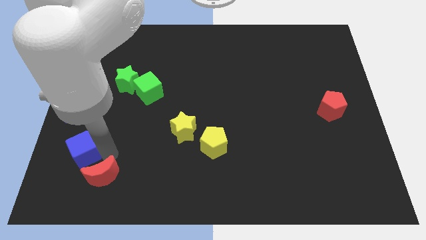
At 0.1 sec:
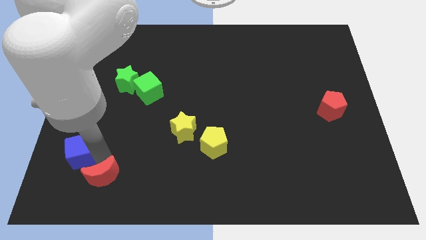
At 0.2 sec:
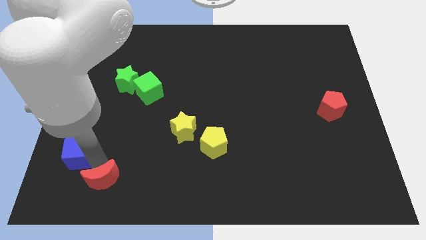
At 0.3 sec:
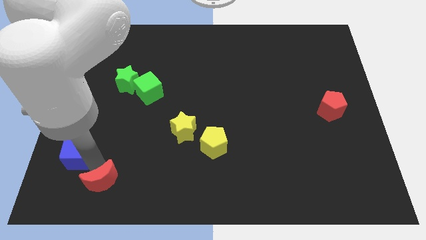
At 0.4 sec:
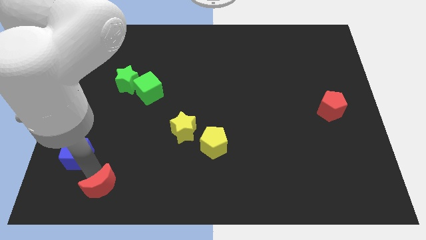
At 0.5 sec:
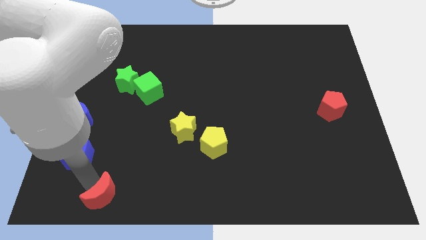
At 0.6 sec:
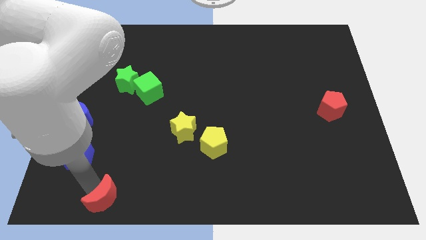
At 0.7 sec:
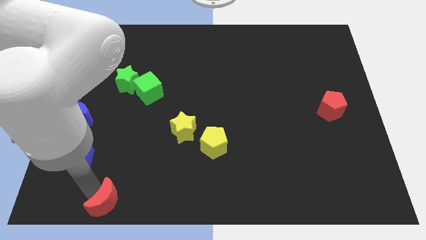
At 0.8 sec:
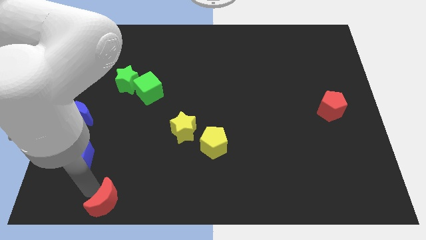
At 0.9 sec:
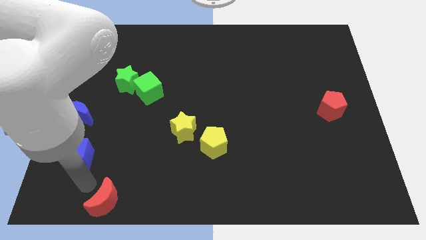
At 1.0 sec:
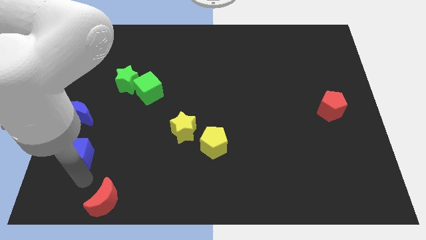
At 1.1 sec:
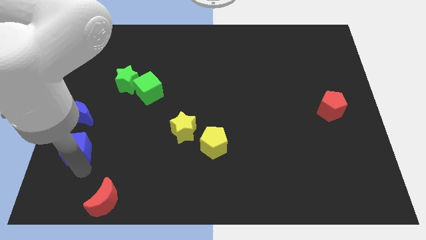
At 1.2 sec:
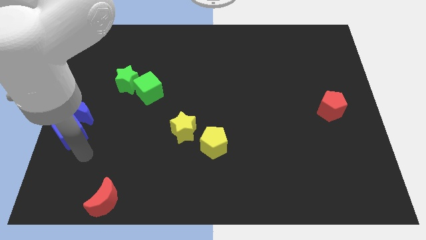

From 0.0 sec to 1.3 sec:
separate red moon from blue cube

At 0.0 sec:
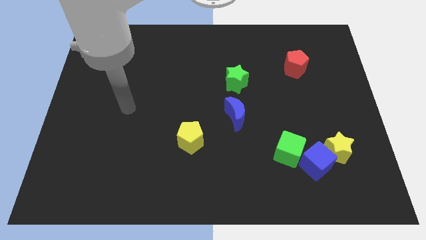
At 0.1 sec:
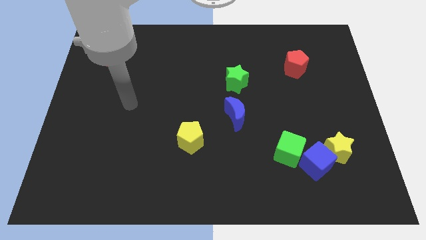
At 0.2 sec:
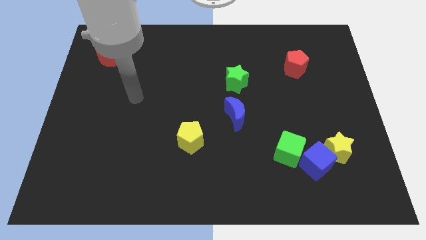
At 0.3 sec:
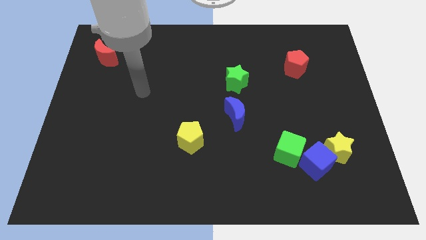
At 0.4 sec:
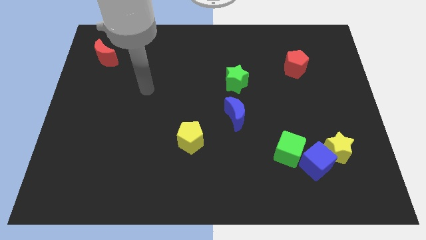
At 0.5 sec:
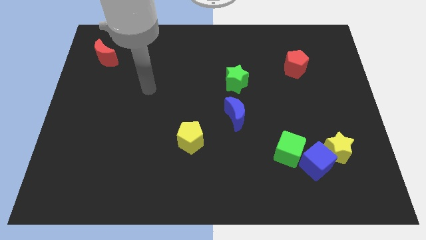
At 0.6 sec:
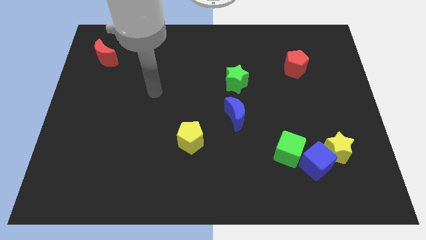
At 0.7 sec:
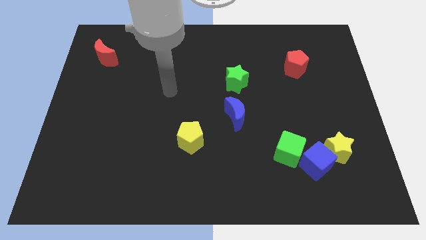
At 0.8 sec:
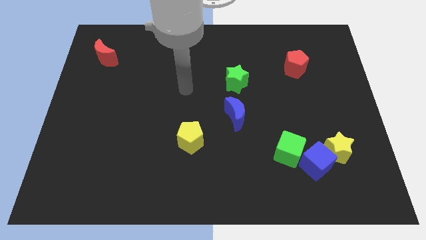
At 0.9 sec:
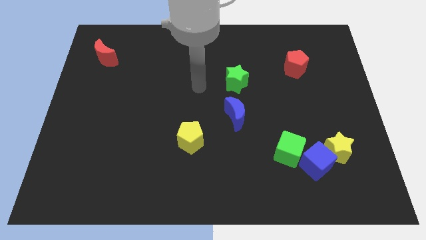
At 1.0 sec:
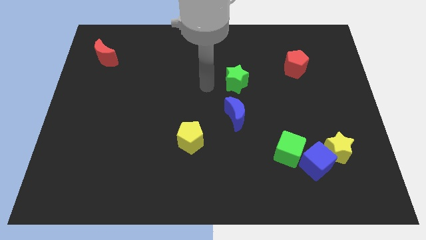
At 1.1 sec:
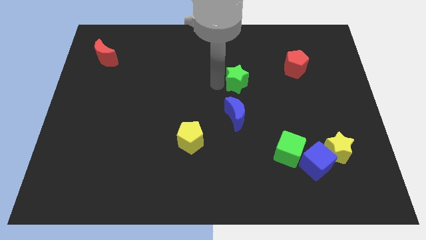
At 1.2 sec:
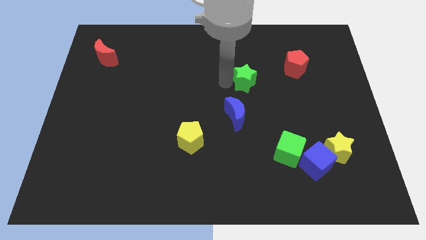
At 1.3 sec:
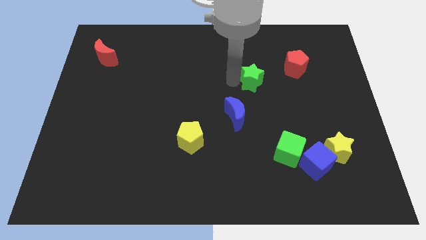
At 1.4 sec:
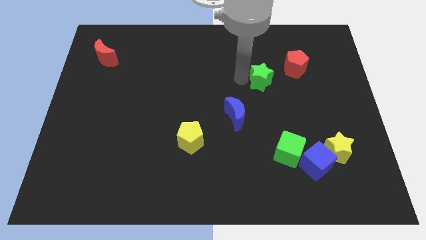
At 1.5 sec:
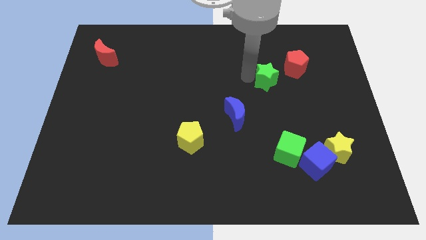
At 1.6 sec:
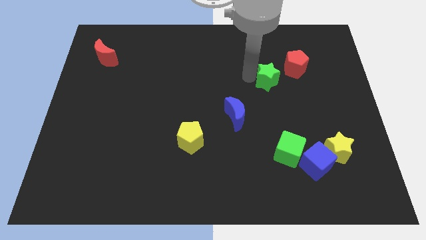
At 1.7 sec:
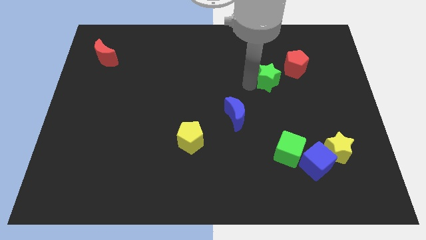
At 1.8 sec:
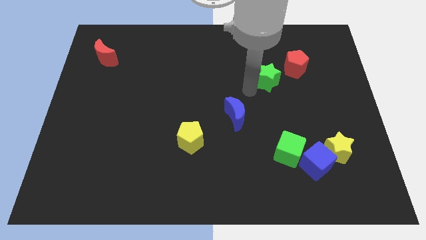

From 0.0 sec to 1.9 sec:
move the green star to the top right of the blue crescent

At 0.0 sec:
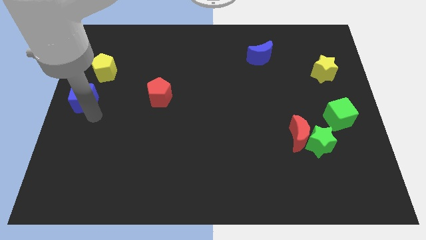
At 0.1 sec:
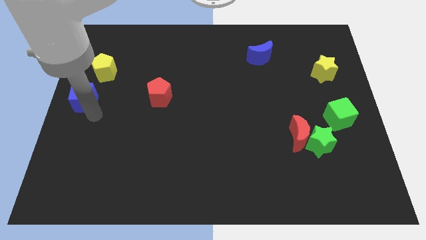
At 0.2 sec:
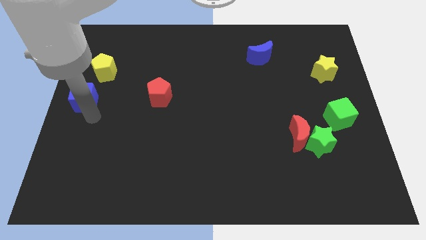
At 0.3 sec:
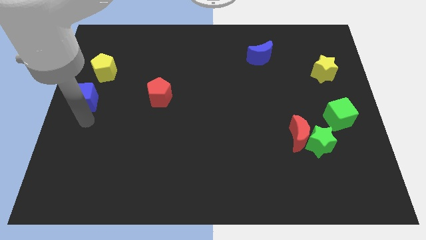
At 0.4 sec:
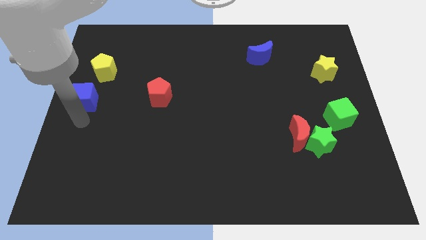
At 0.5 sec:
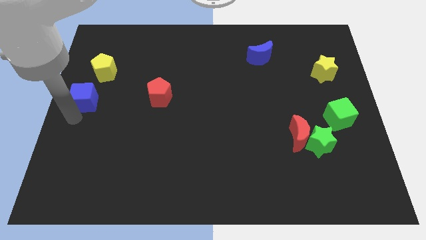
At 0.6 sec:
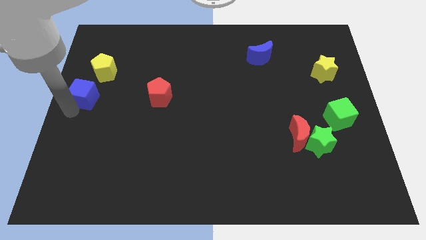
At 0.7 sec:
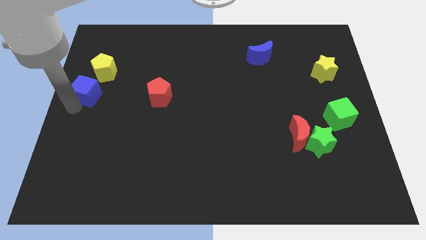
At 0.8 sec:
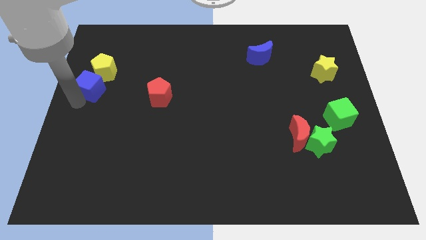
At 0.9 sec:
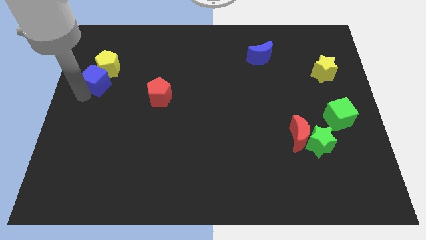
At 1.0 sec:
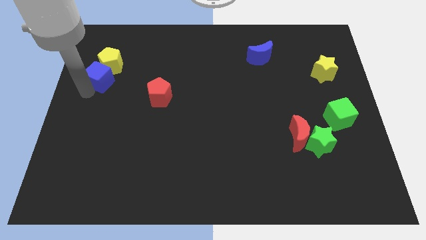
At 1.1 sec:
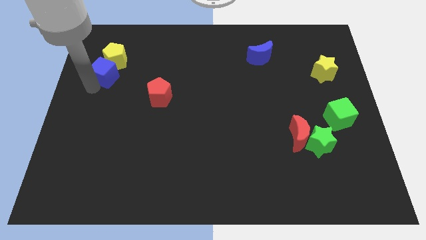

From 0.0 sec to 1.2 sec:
push the blue cube into yellow pentagon

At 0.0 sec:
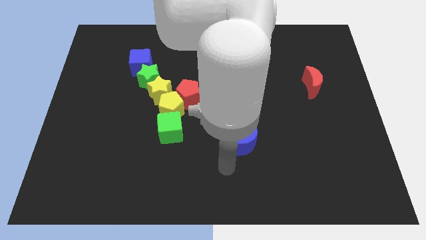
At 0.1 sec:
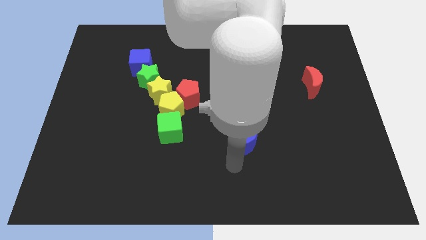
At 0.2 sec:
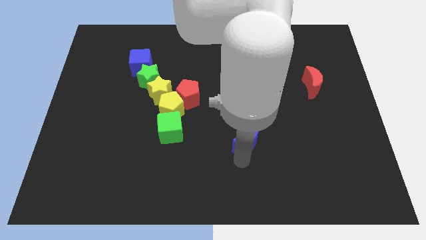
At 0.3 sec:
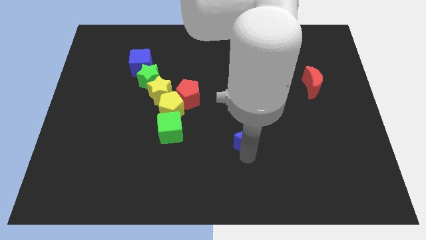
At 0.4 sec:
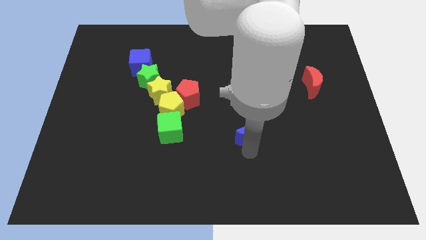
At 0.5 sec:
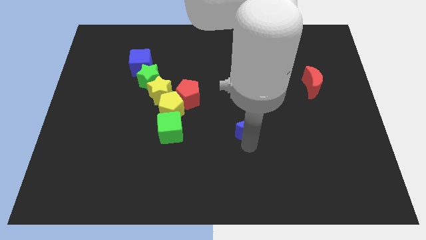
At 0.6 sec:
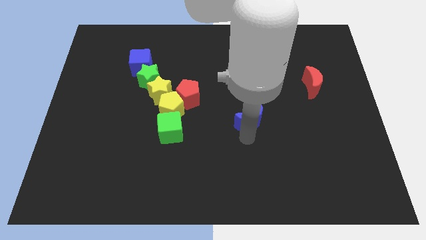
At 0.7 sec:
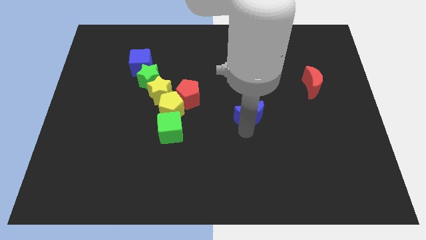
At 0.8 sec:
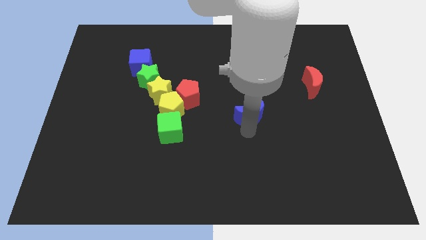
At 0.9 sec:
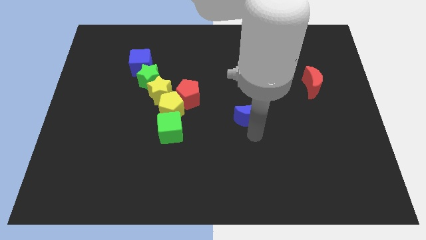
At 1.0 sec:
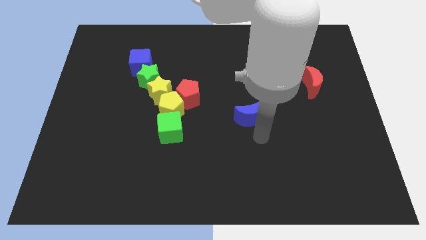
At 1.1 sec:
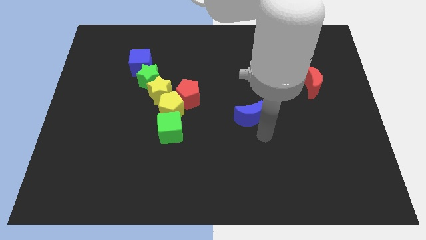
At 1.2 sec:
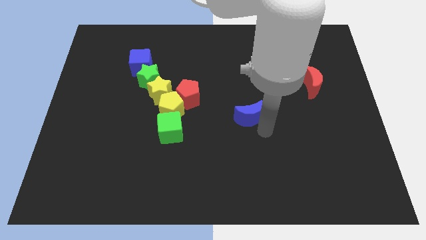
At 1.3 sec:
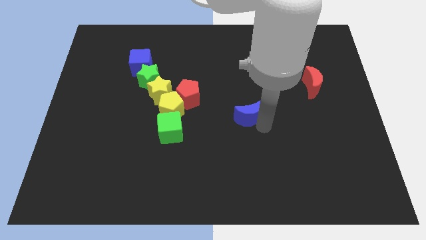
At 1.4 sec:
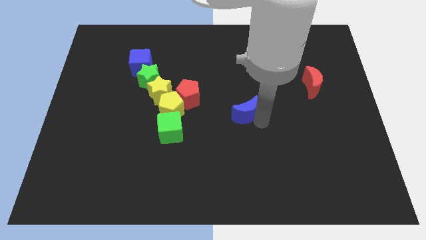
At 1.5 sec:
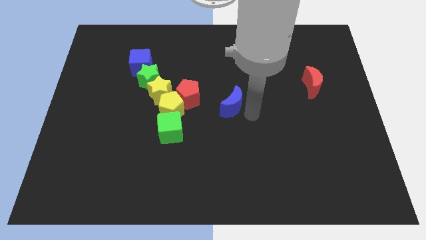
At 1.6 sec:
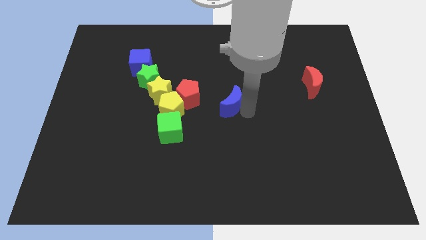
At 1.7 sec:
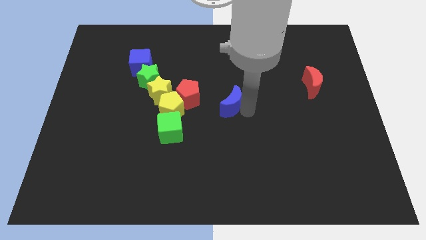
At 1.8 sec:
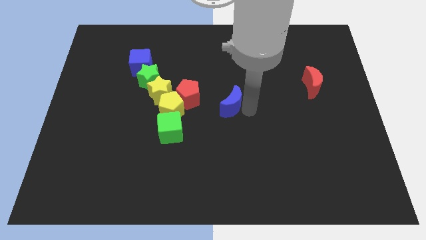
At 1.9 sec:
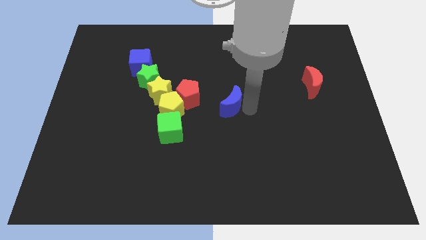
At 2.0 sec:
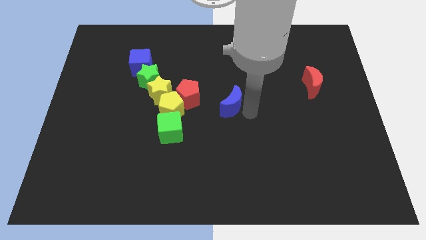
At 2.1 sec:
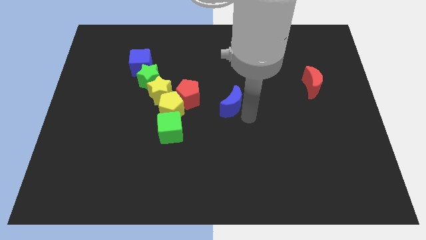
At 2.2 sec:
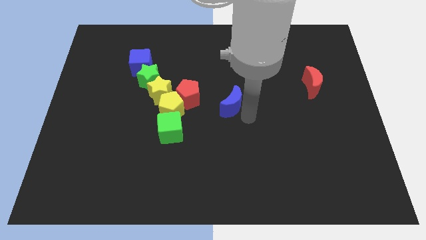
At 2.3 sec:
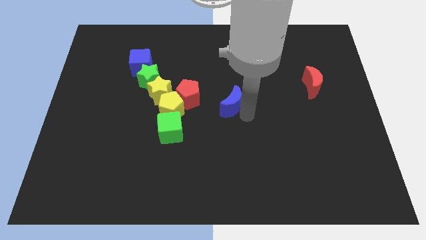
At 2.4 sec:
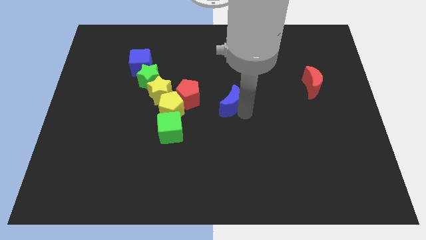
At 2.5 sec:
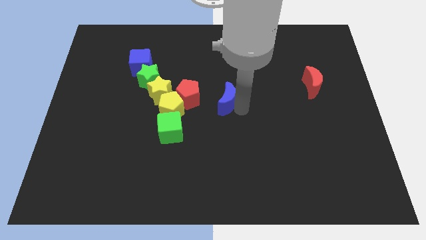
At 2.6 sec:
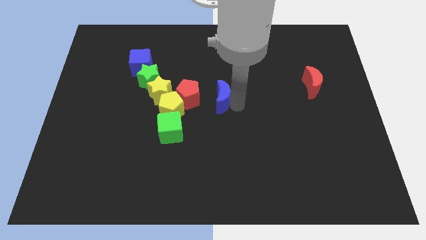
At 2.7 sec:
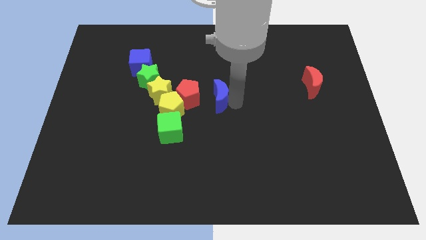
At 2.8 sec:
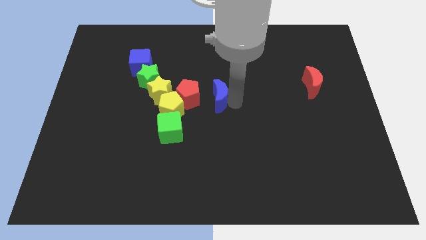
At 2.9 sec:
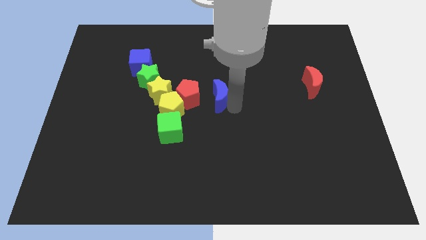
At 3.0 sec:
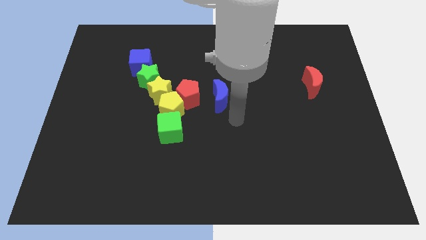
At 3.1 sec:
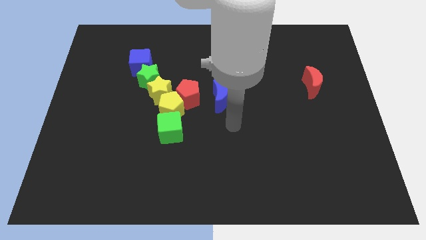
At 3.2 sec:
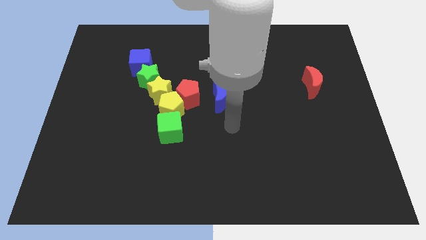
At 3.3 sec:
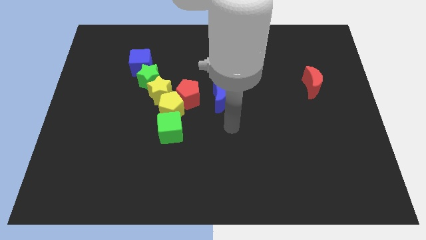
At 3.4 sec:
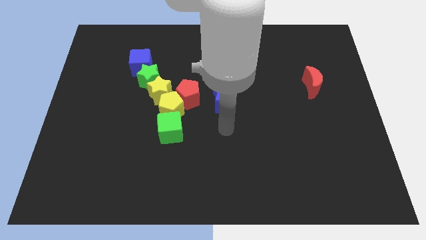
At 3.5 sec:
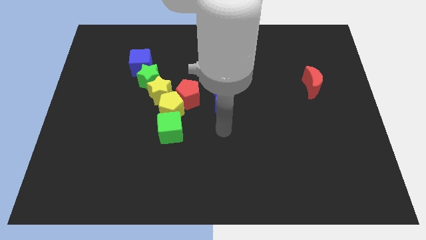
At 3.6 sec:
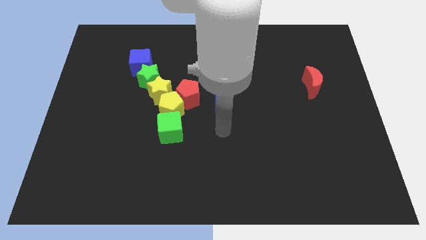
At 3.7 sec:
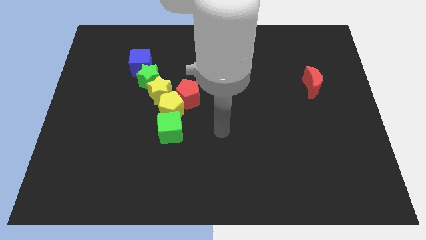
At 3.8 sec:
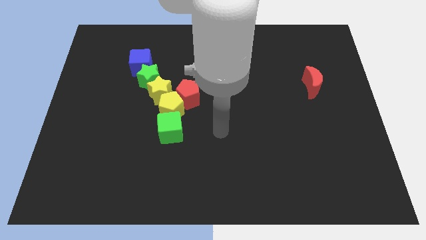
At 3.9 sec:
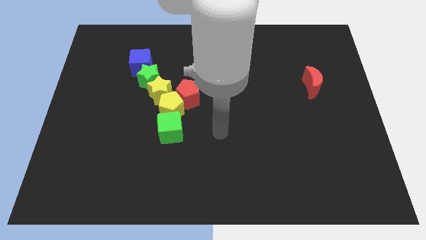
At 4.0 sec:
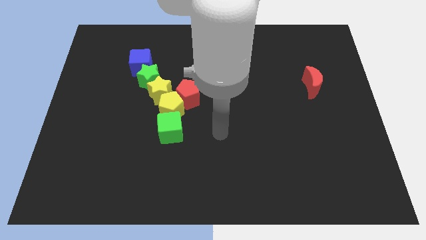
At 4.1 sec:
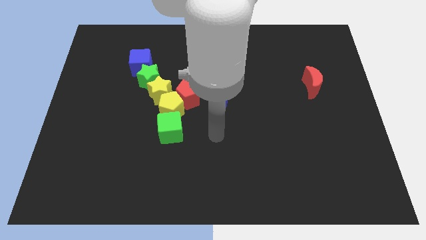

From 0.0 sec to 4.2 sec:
push the blue crescent to the right of the red pentagon

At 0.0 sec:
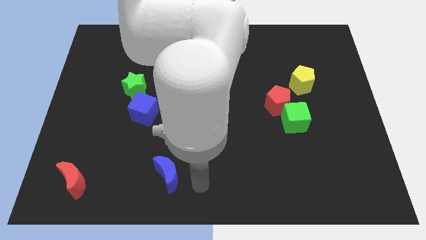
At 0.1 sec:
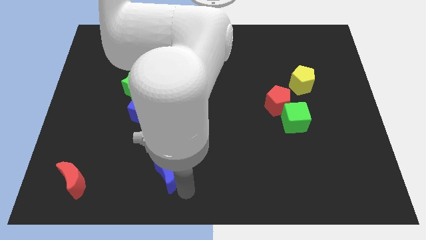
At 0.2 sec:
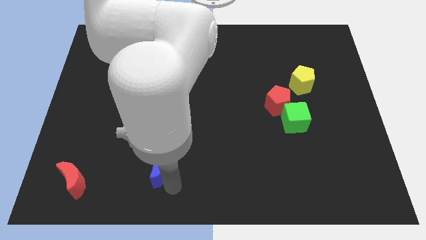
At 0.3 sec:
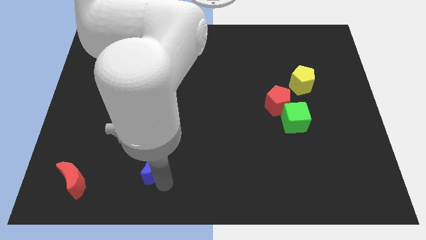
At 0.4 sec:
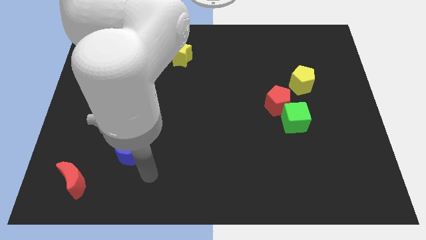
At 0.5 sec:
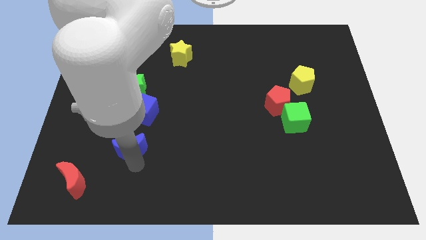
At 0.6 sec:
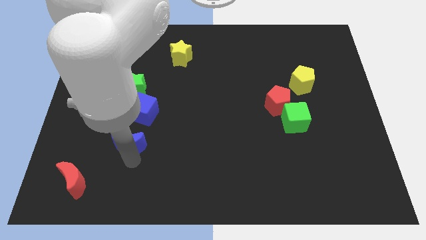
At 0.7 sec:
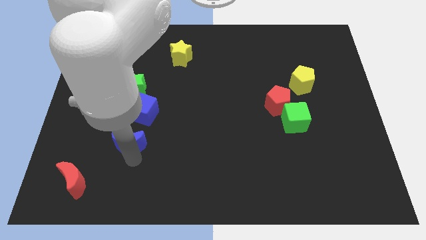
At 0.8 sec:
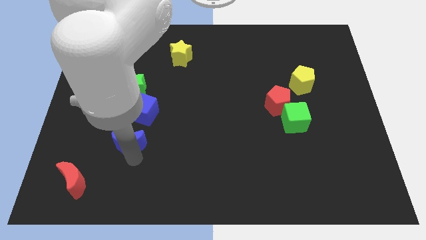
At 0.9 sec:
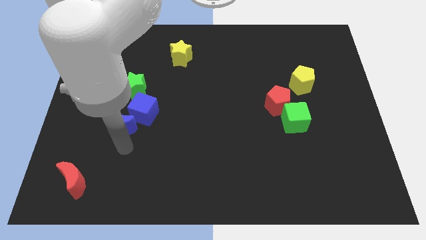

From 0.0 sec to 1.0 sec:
place the blue moon in between the red moon and blue cube
